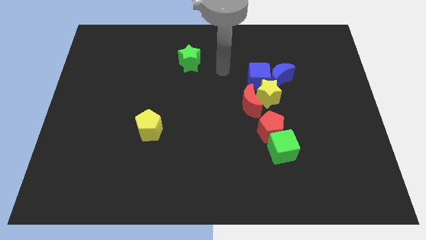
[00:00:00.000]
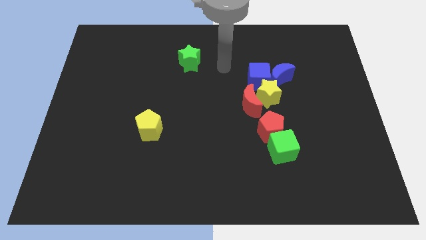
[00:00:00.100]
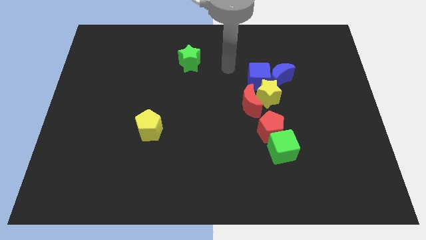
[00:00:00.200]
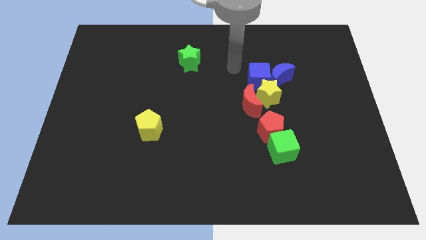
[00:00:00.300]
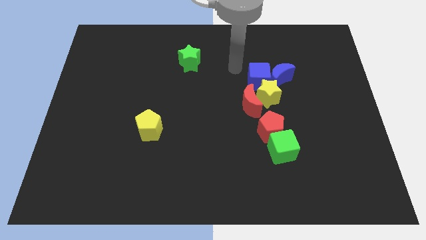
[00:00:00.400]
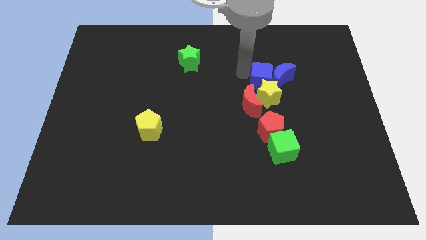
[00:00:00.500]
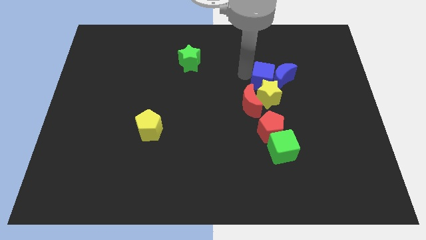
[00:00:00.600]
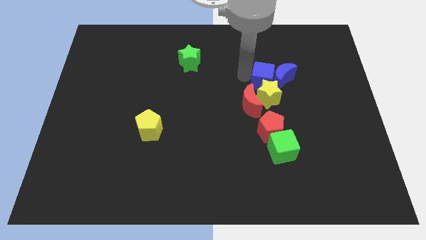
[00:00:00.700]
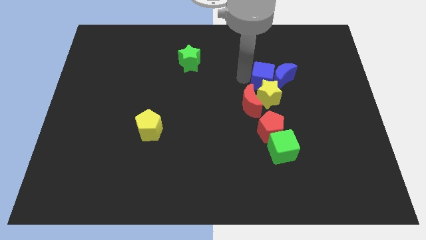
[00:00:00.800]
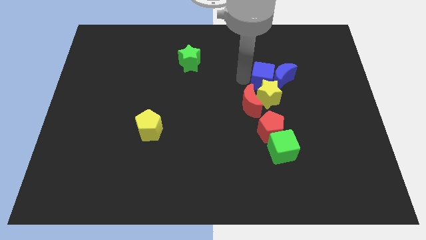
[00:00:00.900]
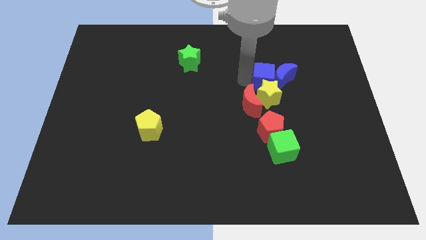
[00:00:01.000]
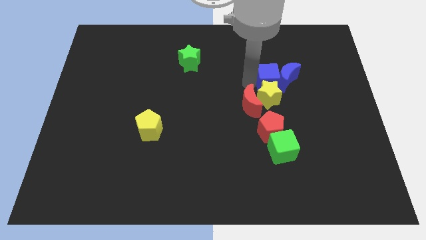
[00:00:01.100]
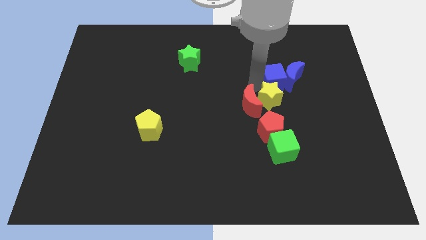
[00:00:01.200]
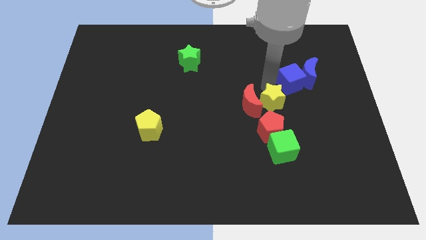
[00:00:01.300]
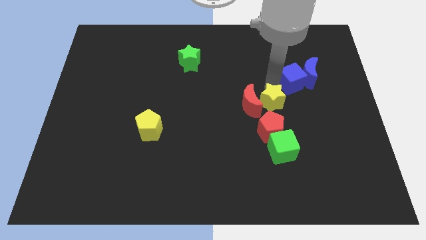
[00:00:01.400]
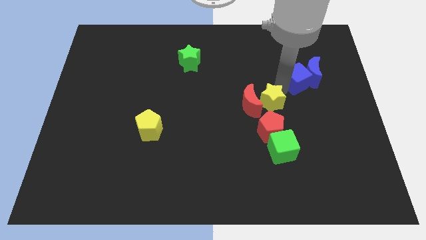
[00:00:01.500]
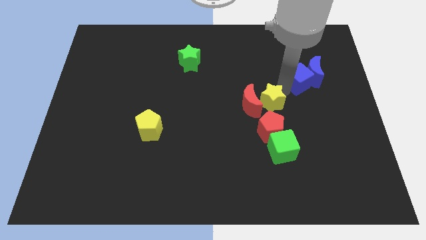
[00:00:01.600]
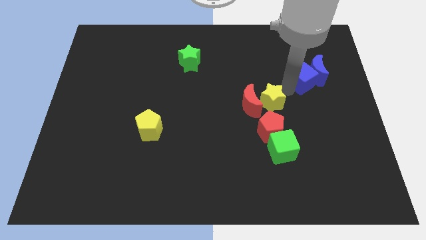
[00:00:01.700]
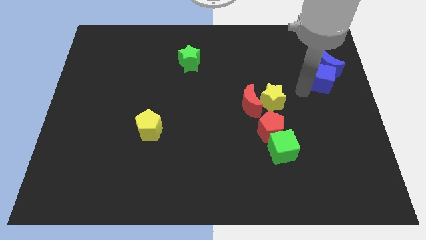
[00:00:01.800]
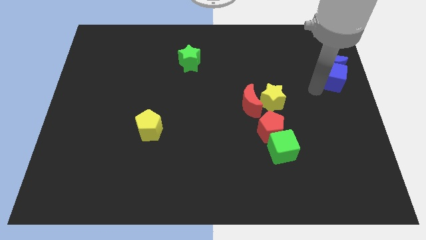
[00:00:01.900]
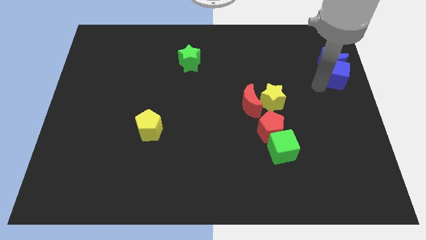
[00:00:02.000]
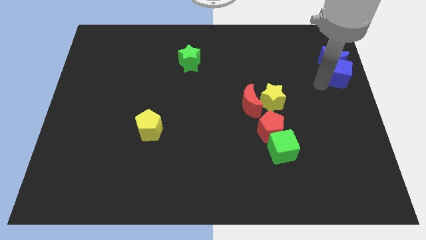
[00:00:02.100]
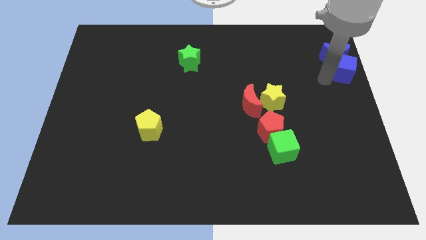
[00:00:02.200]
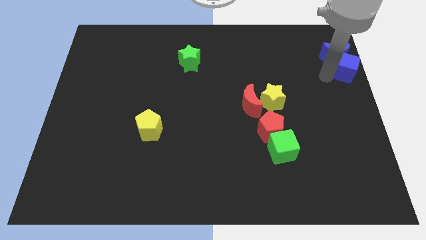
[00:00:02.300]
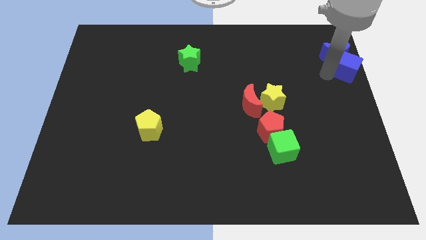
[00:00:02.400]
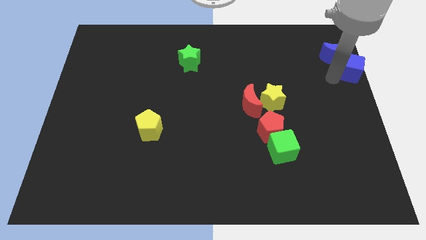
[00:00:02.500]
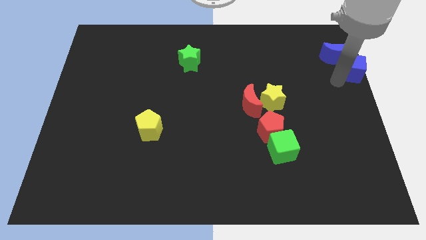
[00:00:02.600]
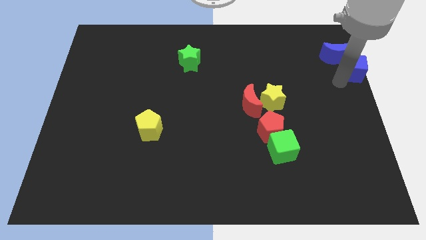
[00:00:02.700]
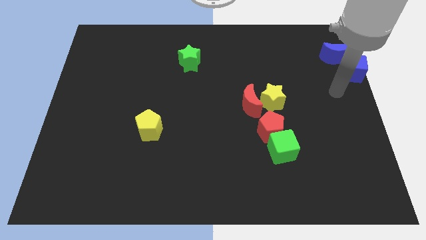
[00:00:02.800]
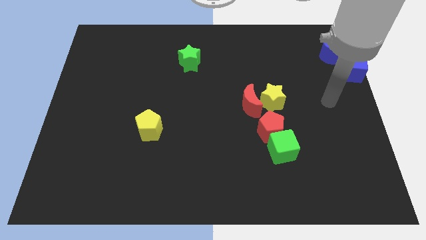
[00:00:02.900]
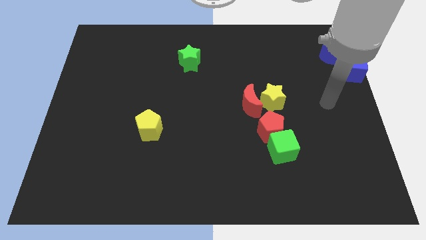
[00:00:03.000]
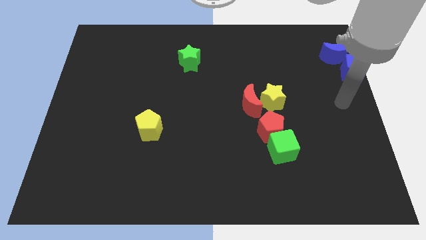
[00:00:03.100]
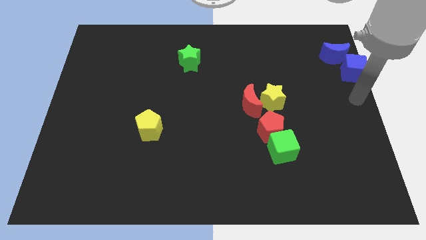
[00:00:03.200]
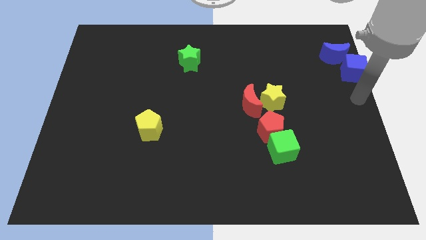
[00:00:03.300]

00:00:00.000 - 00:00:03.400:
slightly push the blue crescent with blue cube to the right of the board

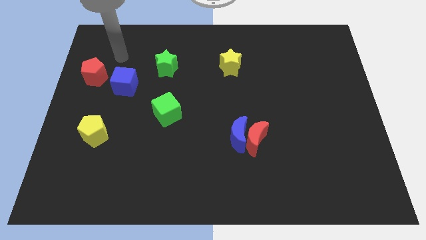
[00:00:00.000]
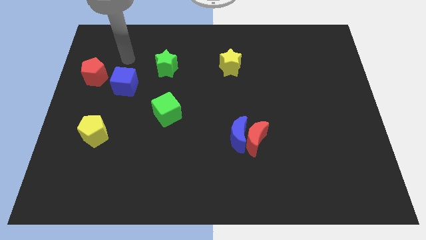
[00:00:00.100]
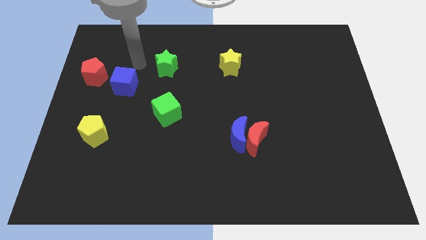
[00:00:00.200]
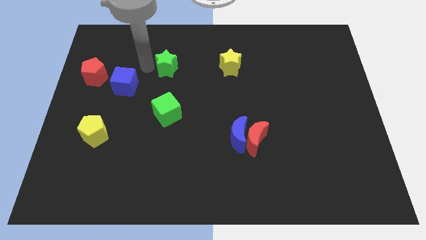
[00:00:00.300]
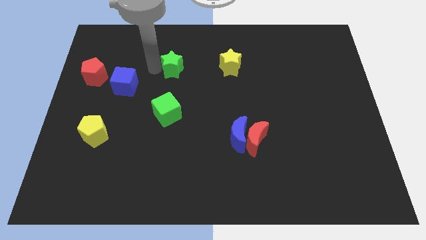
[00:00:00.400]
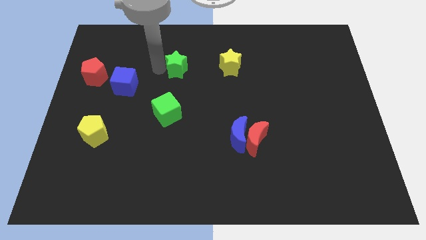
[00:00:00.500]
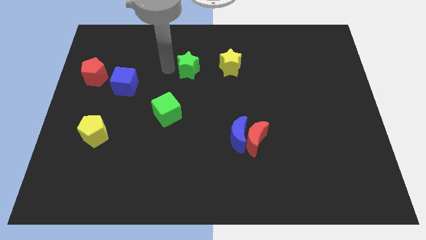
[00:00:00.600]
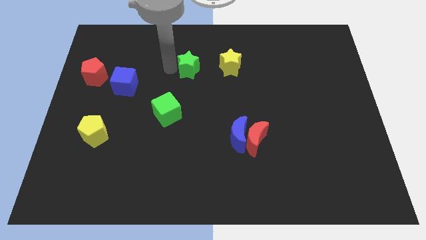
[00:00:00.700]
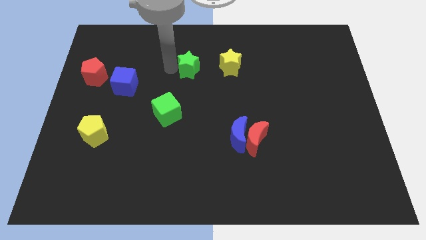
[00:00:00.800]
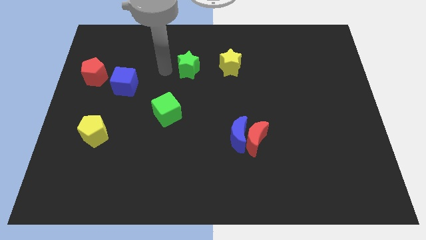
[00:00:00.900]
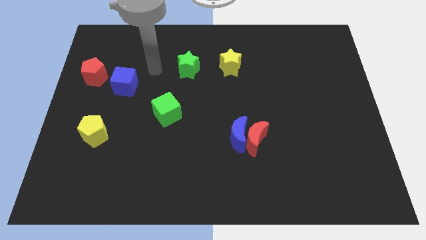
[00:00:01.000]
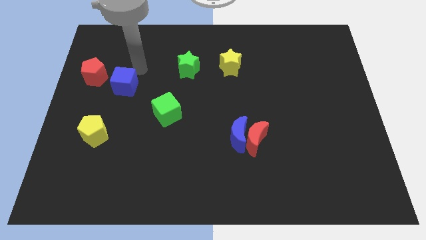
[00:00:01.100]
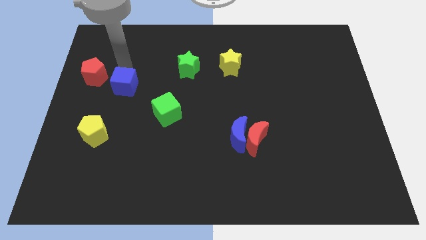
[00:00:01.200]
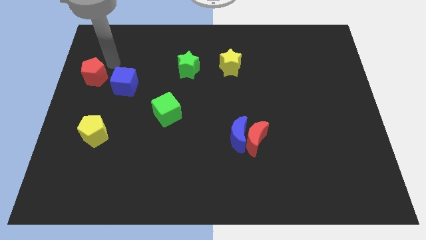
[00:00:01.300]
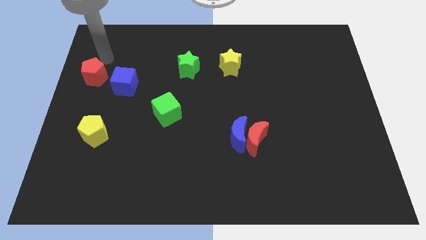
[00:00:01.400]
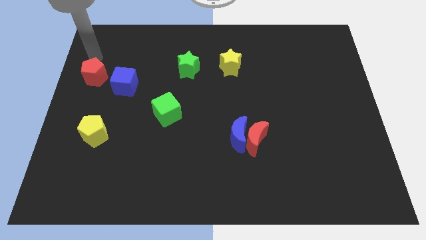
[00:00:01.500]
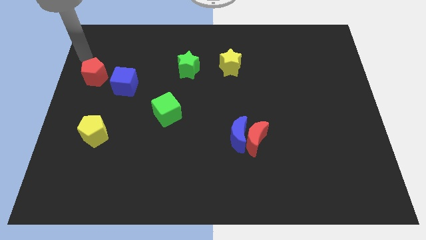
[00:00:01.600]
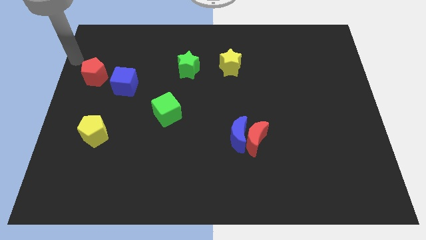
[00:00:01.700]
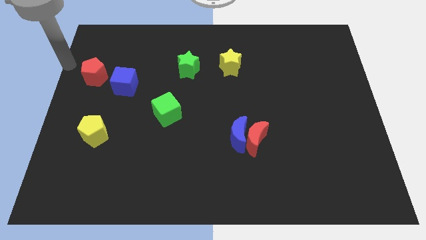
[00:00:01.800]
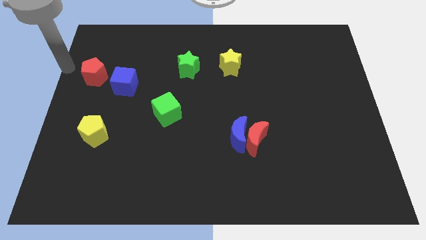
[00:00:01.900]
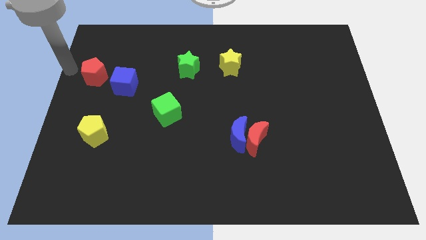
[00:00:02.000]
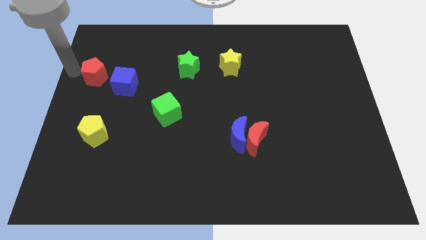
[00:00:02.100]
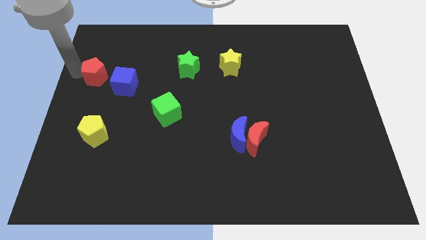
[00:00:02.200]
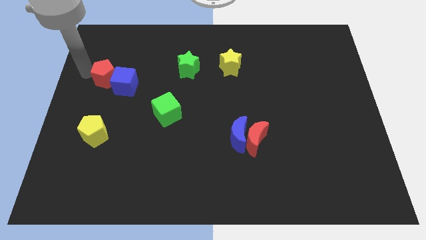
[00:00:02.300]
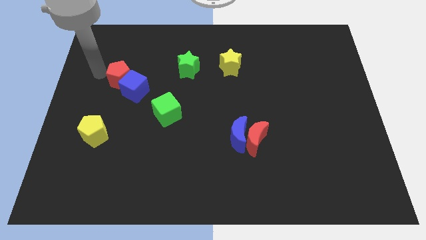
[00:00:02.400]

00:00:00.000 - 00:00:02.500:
push red pentagon into blue cube

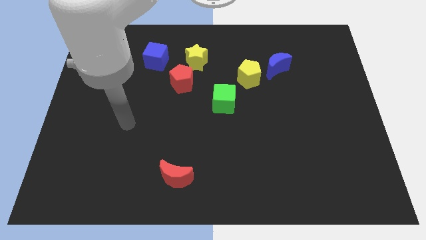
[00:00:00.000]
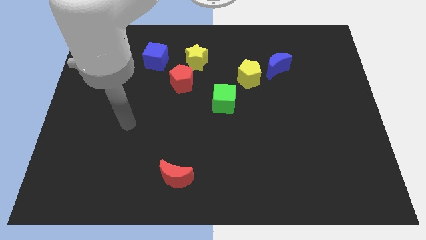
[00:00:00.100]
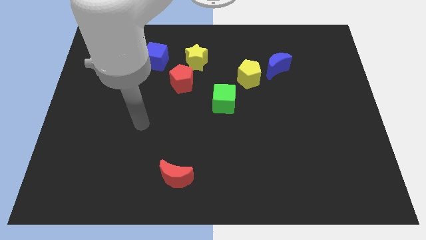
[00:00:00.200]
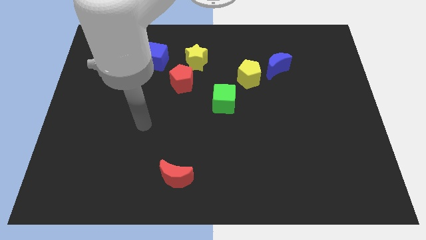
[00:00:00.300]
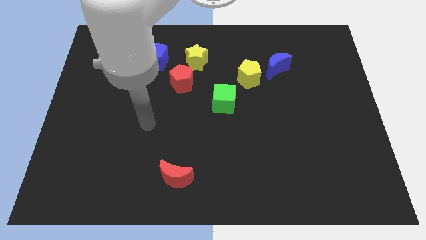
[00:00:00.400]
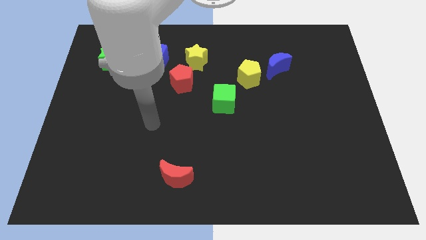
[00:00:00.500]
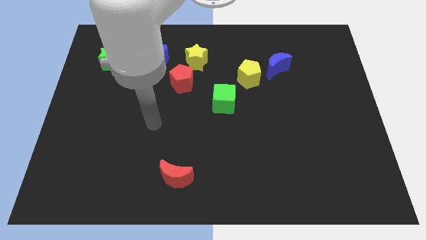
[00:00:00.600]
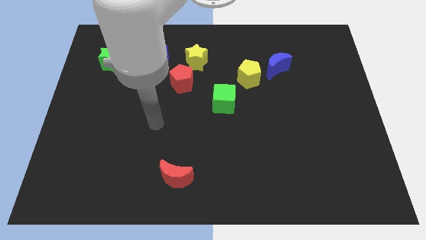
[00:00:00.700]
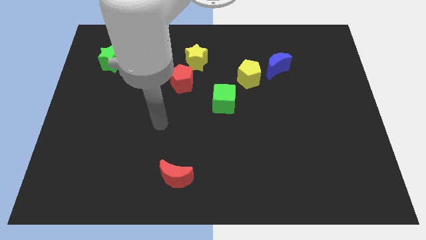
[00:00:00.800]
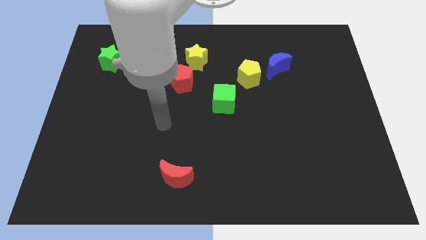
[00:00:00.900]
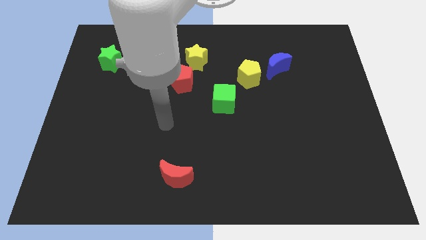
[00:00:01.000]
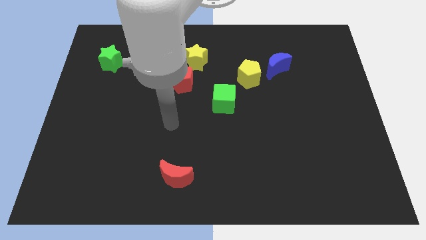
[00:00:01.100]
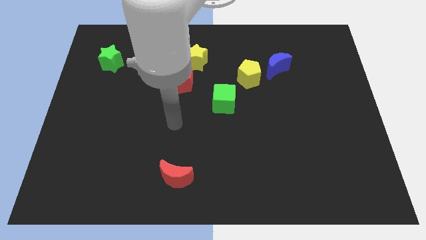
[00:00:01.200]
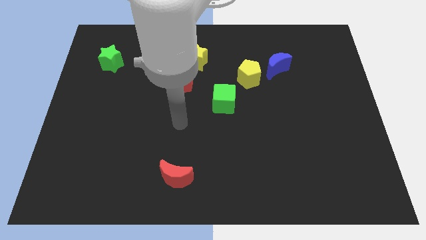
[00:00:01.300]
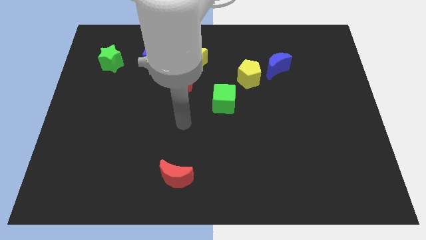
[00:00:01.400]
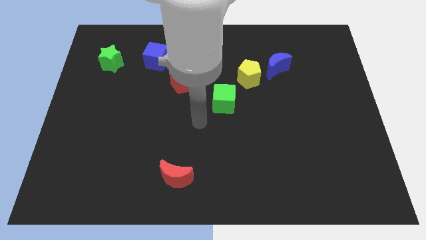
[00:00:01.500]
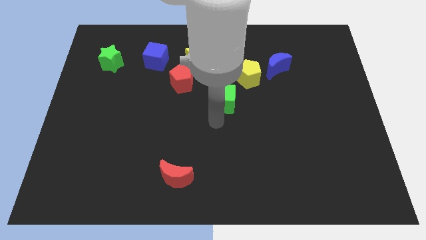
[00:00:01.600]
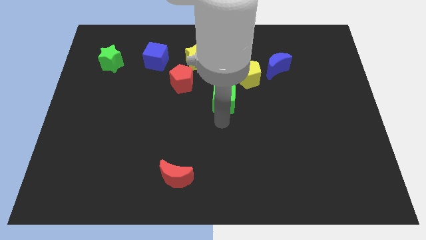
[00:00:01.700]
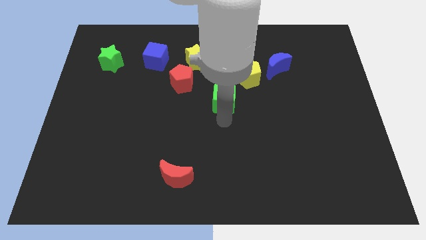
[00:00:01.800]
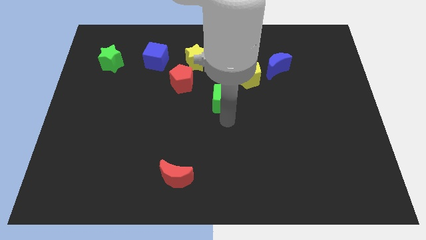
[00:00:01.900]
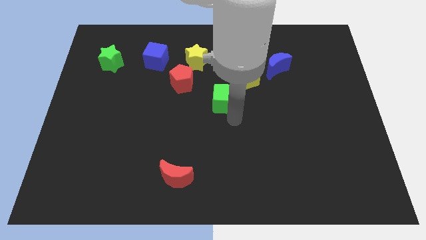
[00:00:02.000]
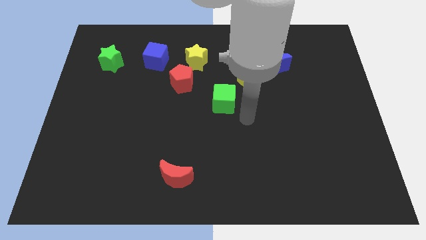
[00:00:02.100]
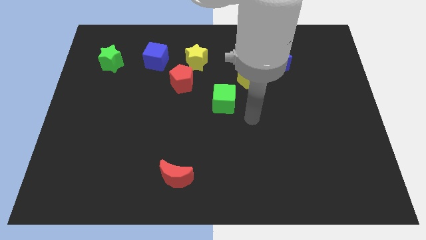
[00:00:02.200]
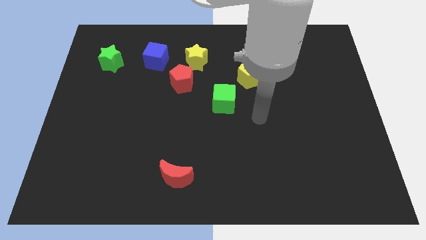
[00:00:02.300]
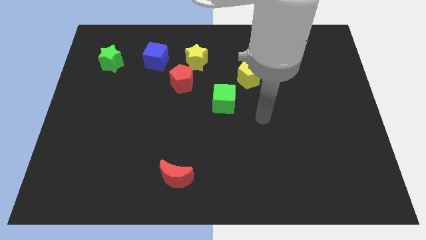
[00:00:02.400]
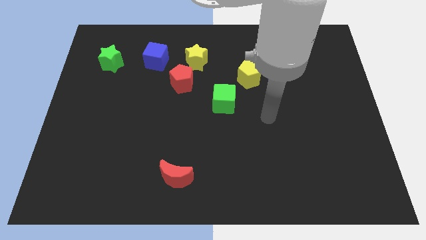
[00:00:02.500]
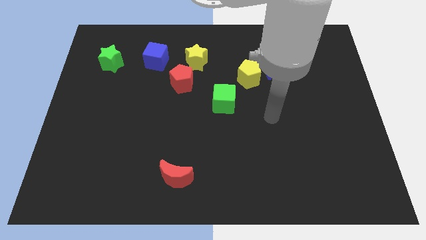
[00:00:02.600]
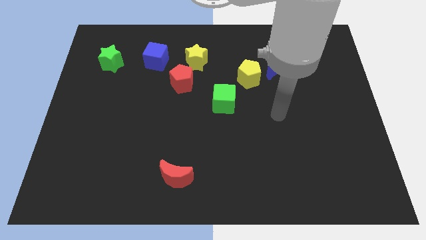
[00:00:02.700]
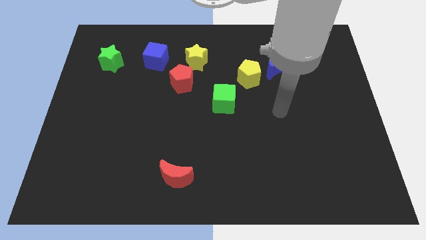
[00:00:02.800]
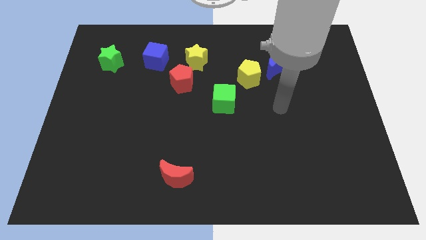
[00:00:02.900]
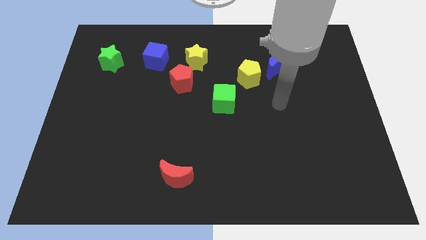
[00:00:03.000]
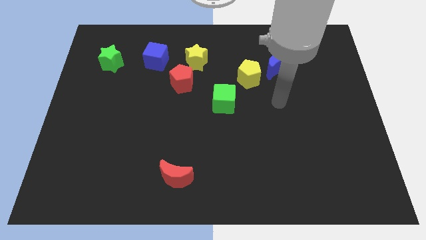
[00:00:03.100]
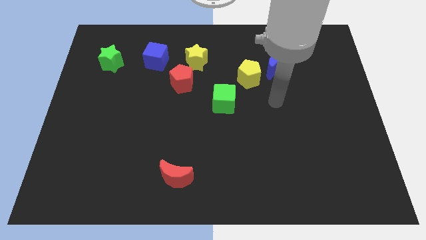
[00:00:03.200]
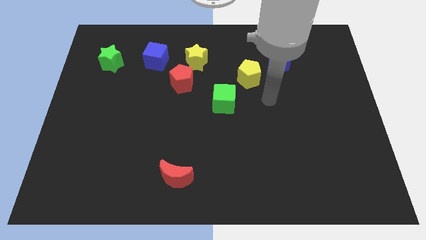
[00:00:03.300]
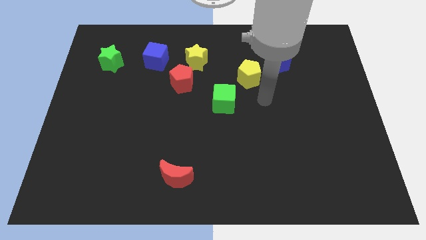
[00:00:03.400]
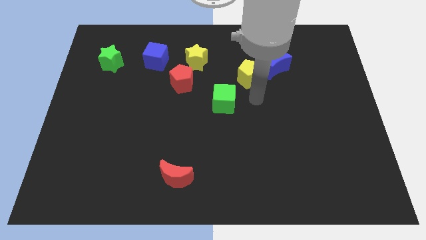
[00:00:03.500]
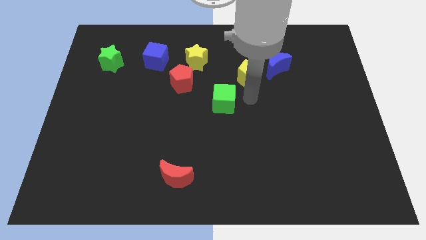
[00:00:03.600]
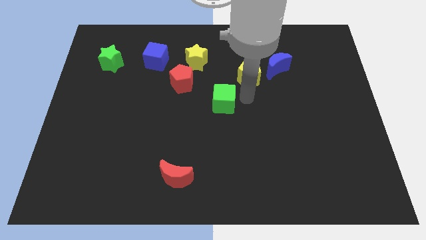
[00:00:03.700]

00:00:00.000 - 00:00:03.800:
move your arm to the right of green cube
